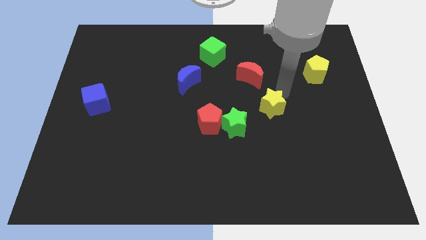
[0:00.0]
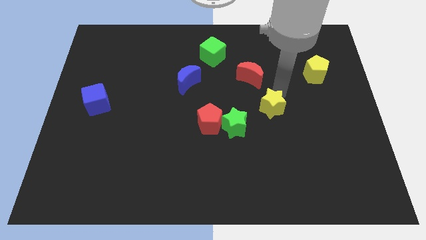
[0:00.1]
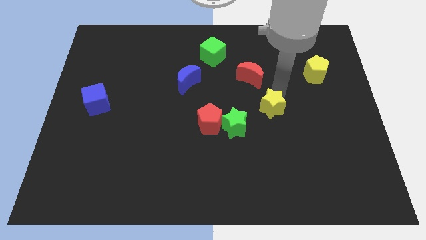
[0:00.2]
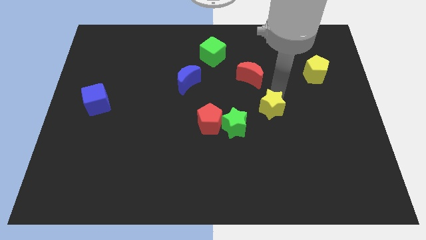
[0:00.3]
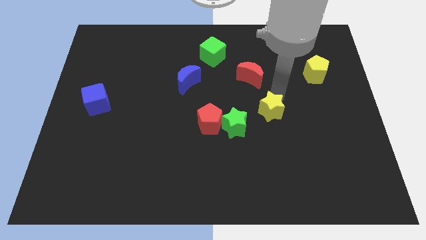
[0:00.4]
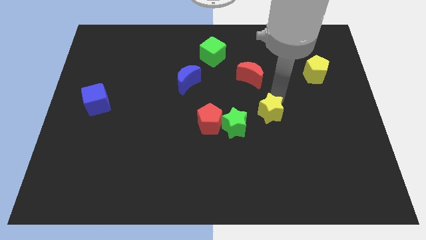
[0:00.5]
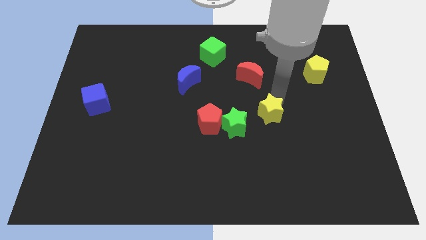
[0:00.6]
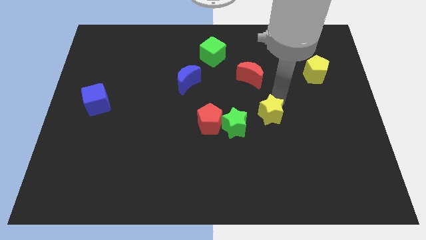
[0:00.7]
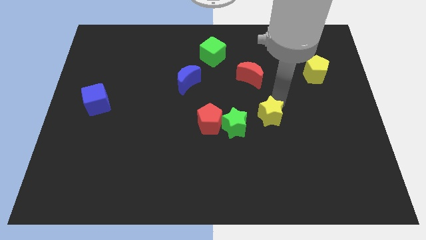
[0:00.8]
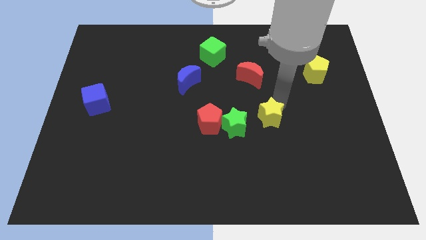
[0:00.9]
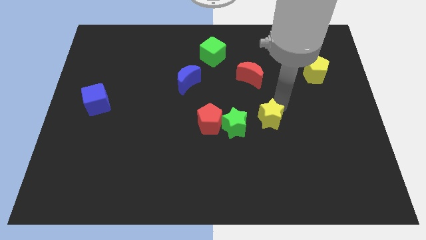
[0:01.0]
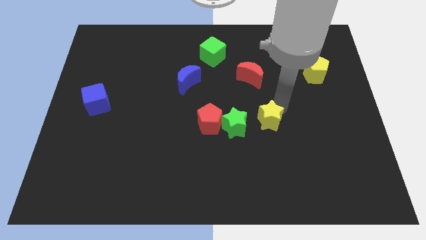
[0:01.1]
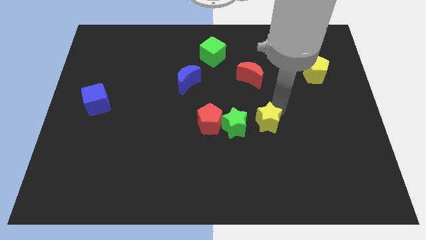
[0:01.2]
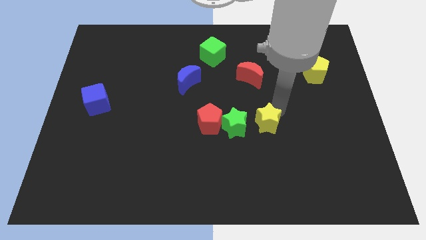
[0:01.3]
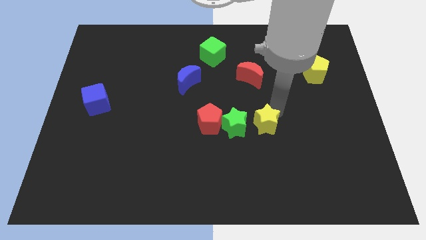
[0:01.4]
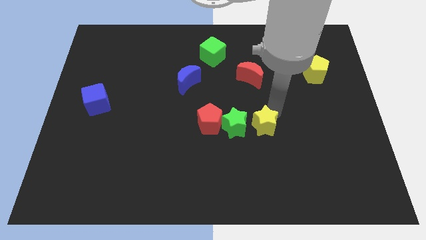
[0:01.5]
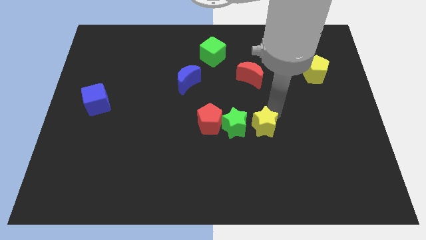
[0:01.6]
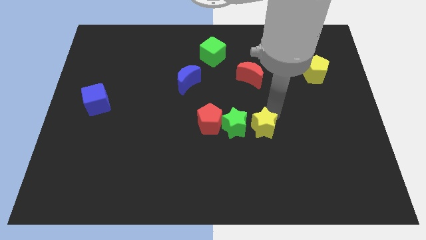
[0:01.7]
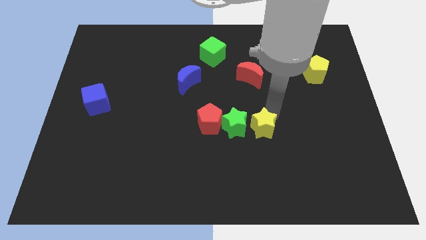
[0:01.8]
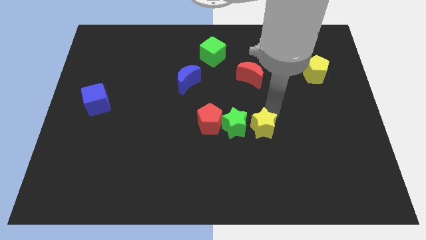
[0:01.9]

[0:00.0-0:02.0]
place the yellow star to the right side of the green star

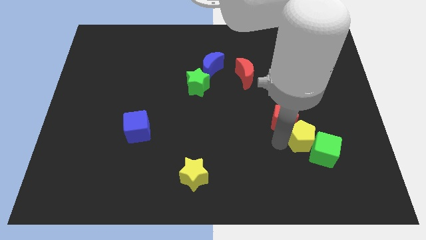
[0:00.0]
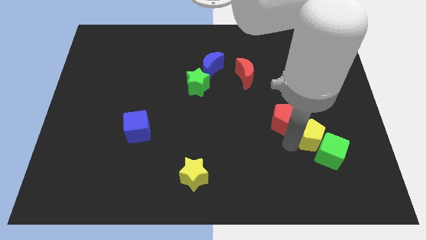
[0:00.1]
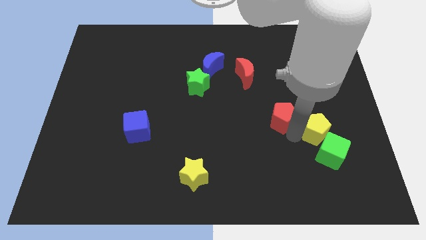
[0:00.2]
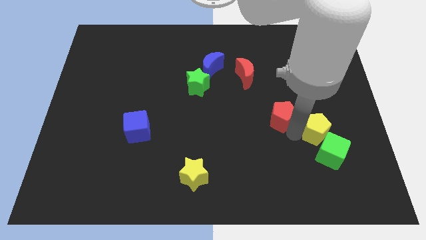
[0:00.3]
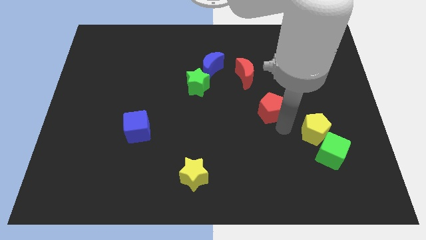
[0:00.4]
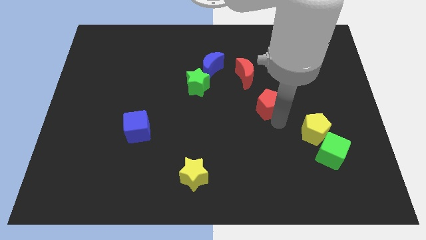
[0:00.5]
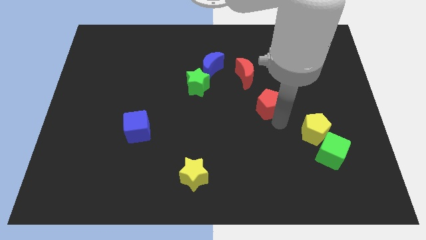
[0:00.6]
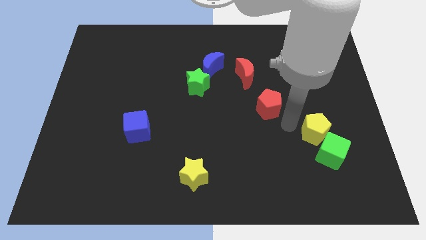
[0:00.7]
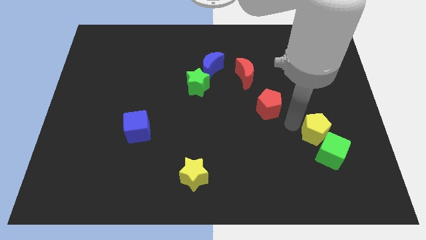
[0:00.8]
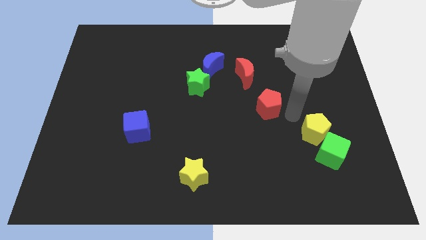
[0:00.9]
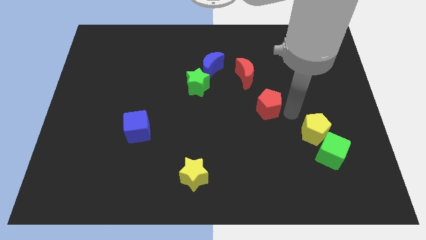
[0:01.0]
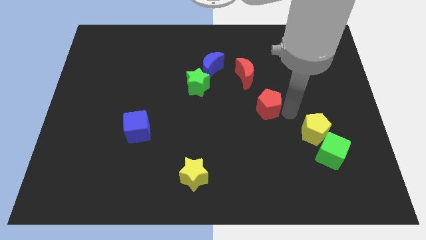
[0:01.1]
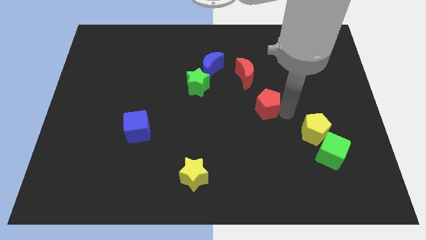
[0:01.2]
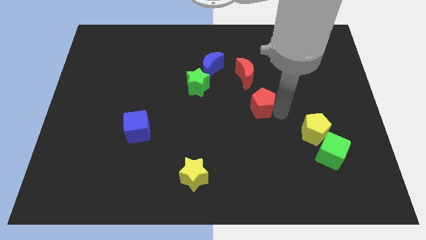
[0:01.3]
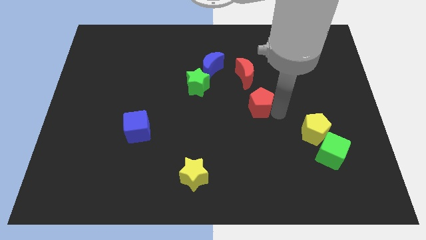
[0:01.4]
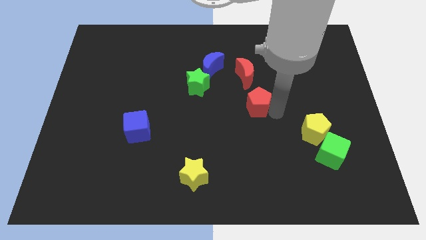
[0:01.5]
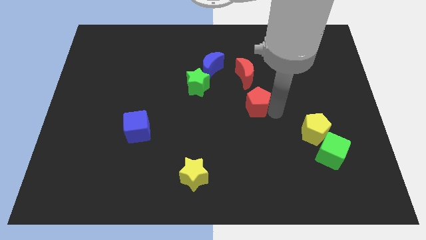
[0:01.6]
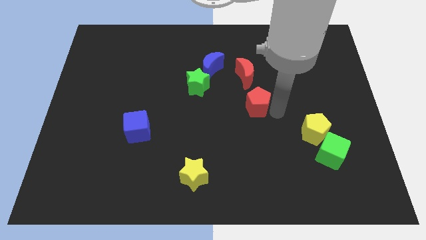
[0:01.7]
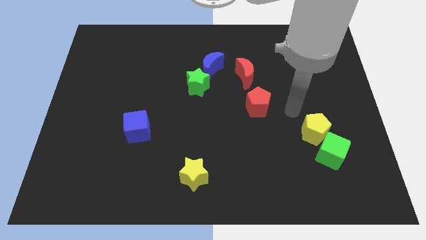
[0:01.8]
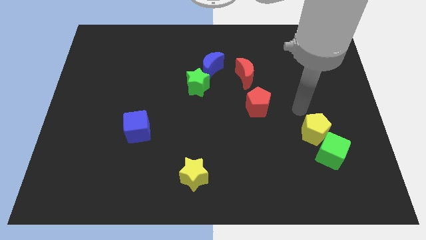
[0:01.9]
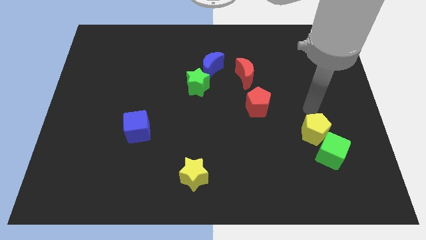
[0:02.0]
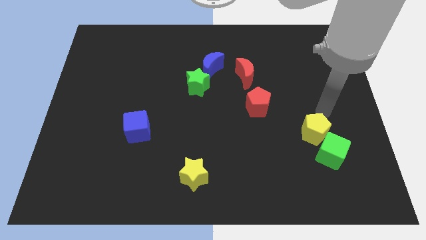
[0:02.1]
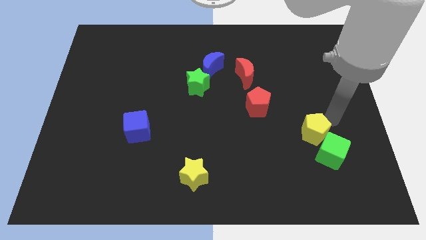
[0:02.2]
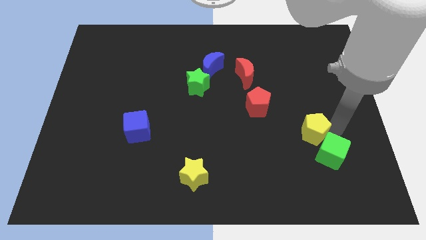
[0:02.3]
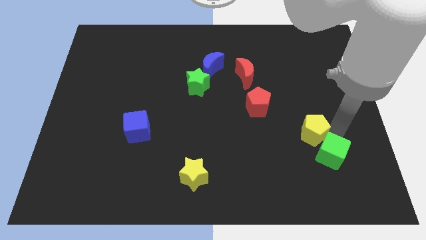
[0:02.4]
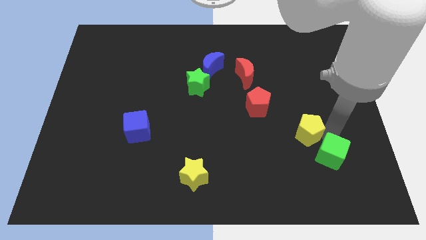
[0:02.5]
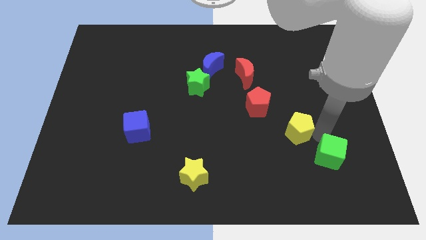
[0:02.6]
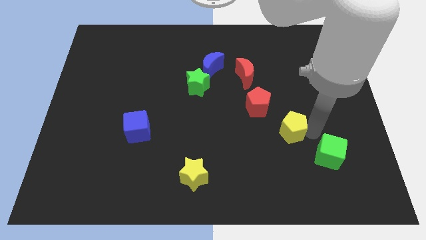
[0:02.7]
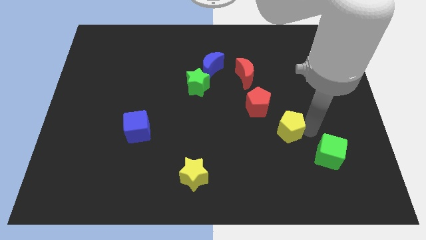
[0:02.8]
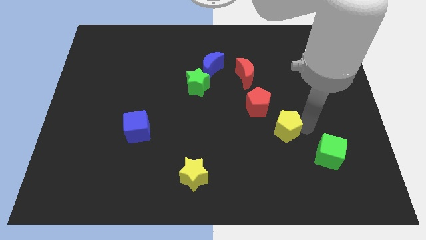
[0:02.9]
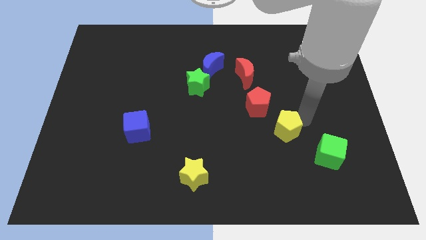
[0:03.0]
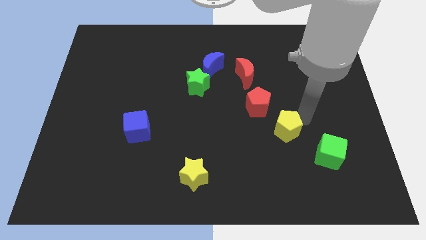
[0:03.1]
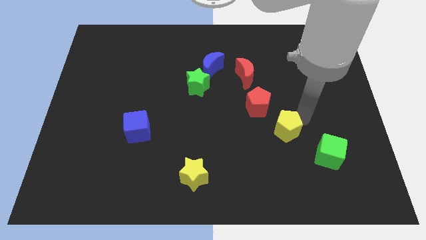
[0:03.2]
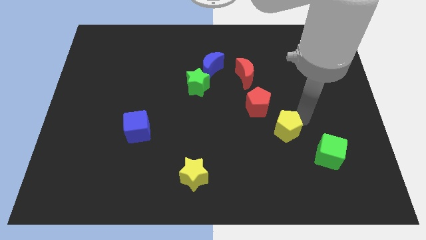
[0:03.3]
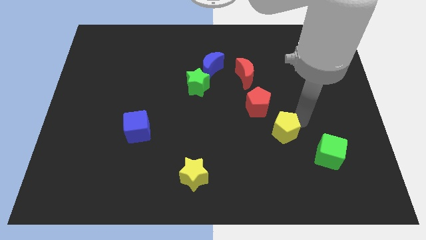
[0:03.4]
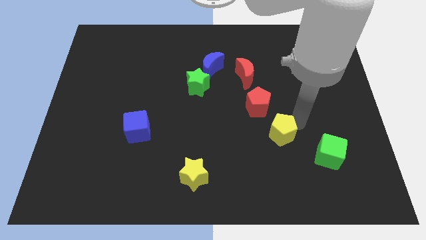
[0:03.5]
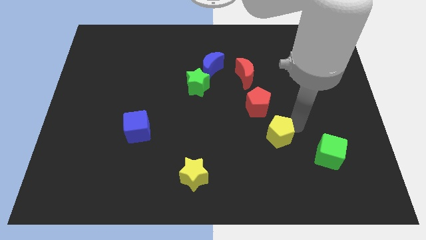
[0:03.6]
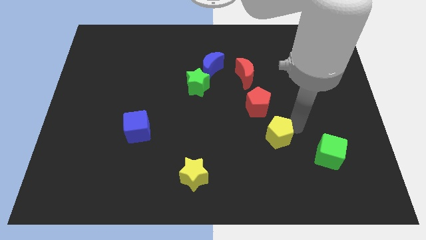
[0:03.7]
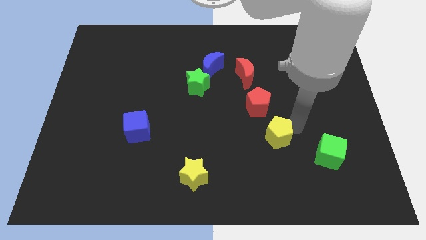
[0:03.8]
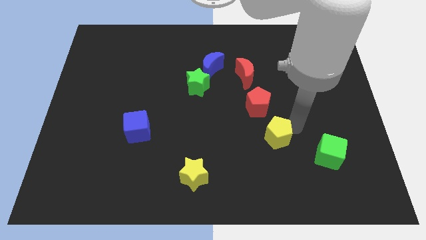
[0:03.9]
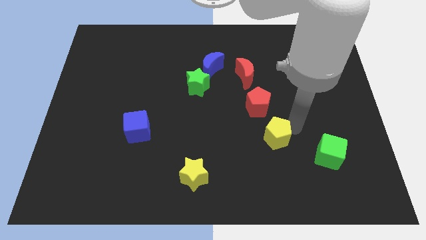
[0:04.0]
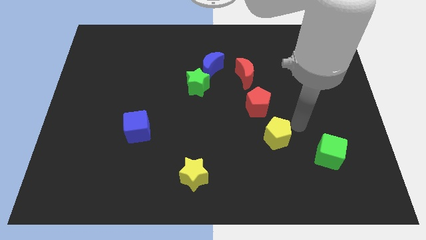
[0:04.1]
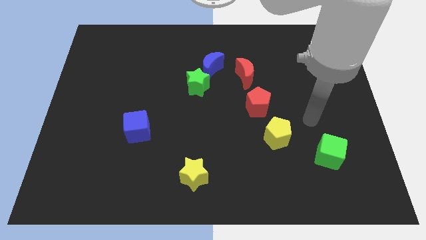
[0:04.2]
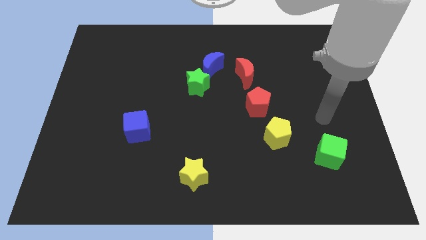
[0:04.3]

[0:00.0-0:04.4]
put the red pentagon and yellow pentagon diagonally at the bottom right side of the red moon

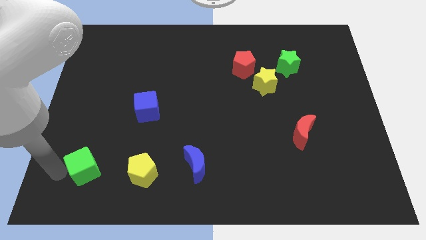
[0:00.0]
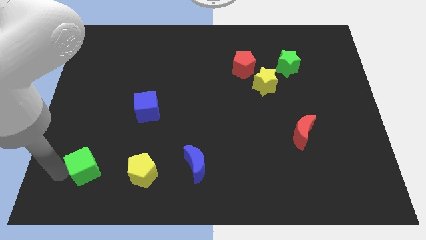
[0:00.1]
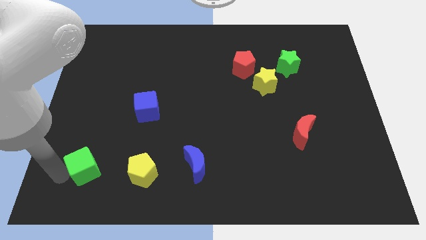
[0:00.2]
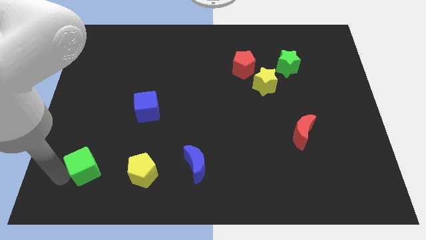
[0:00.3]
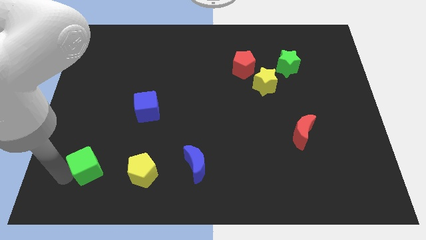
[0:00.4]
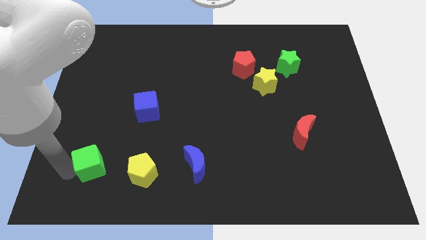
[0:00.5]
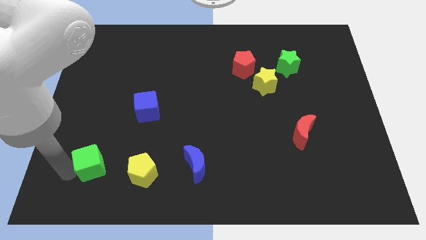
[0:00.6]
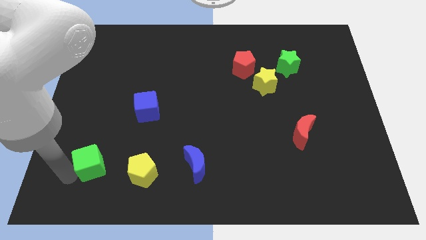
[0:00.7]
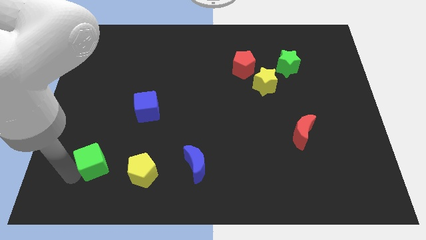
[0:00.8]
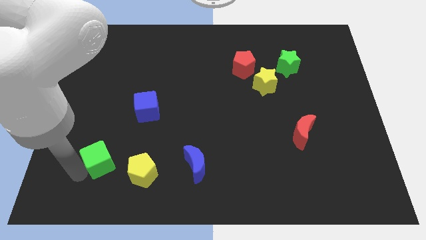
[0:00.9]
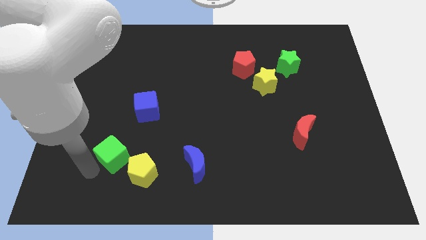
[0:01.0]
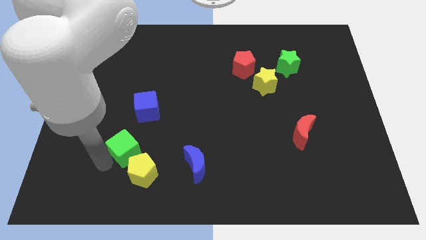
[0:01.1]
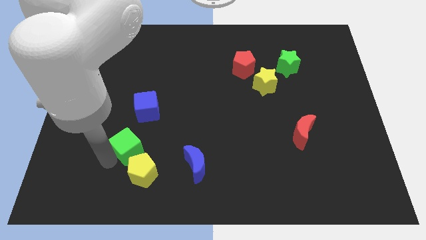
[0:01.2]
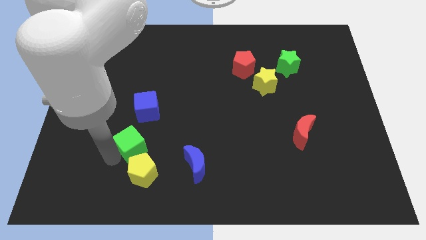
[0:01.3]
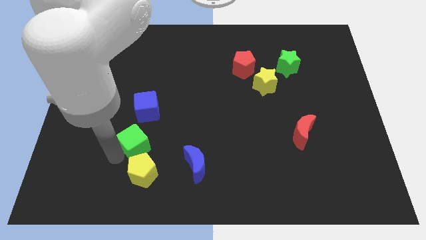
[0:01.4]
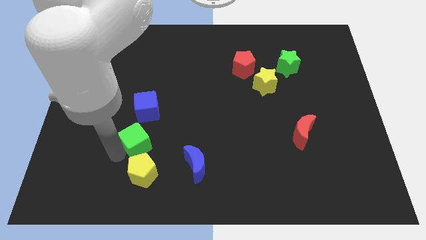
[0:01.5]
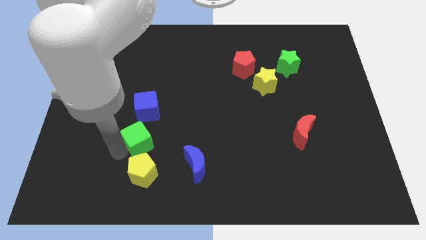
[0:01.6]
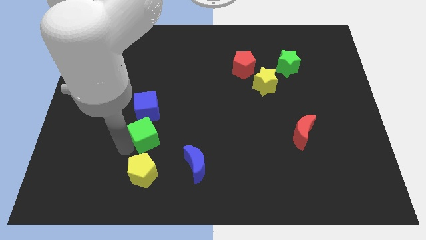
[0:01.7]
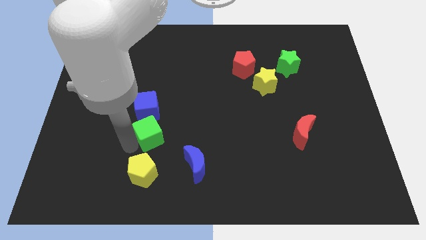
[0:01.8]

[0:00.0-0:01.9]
put the green cube above the yellow pentagon

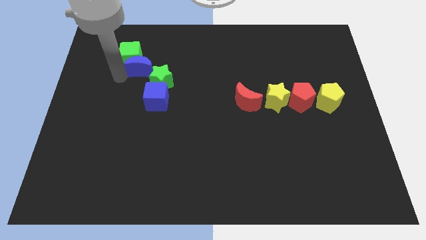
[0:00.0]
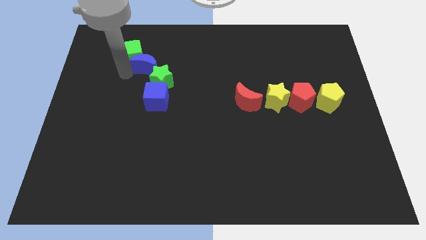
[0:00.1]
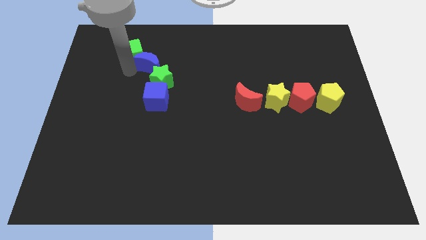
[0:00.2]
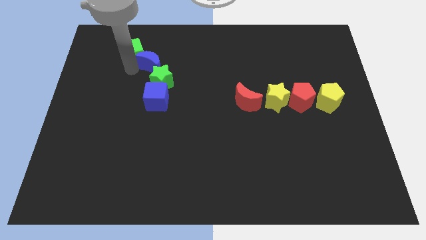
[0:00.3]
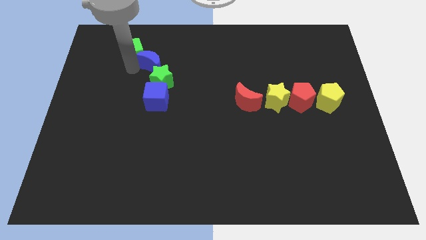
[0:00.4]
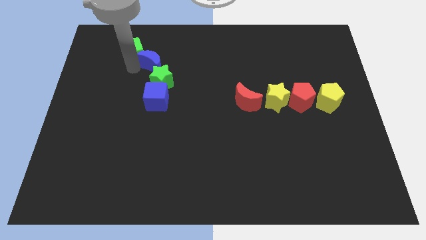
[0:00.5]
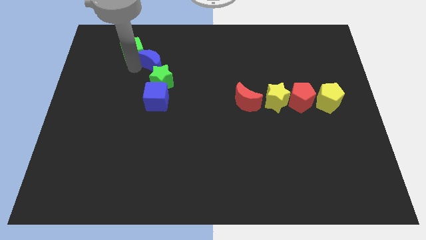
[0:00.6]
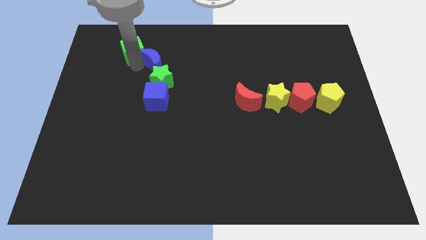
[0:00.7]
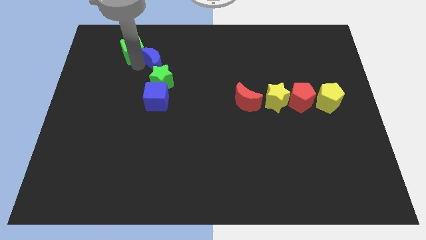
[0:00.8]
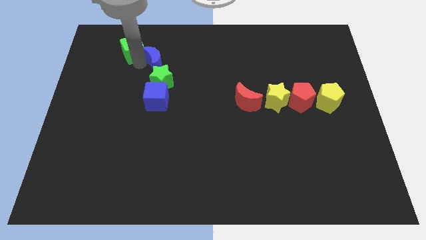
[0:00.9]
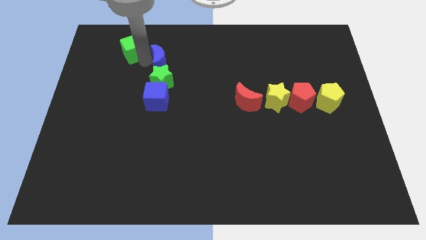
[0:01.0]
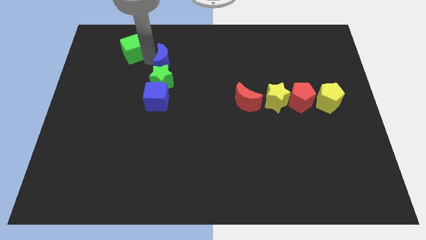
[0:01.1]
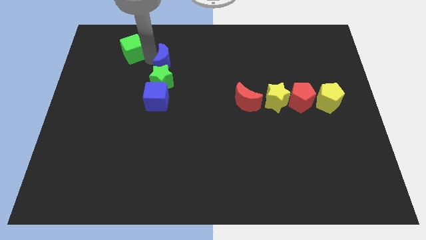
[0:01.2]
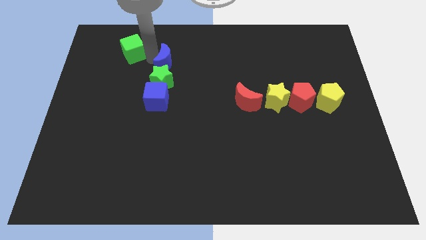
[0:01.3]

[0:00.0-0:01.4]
place the blue moon above the green star
